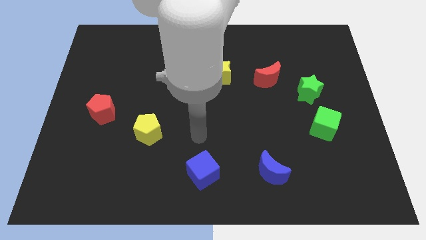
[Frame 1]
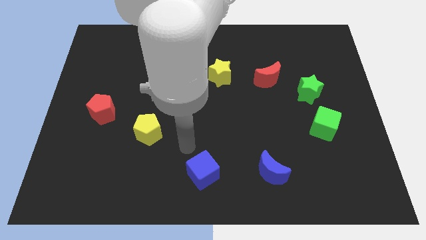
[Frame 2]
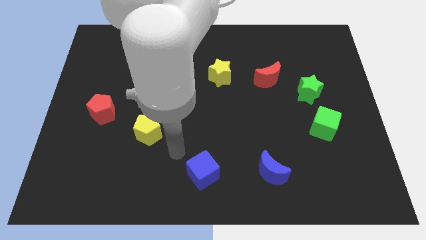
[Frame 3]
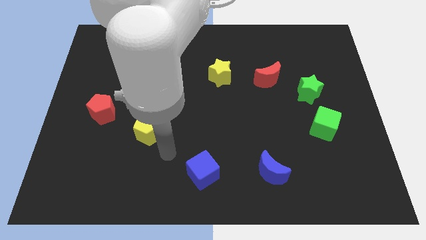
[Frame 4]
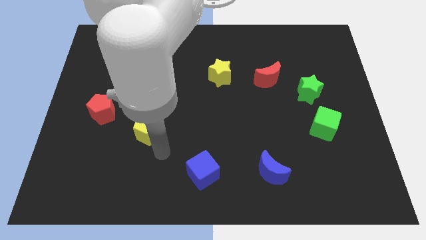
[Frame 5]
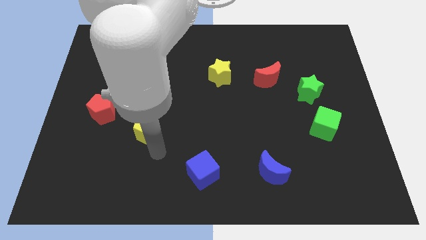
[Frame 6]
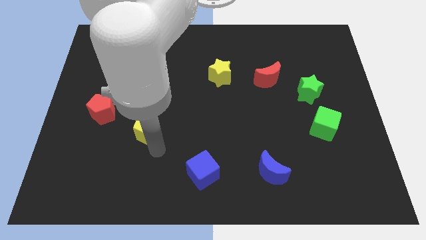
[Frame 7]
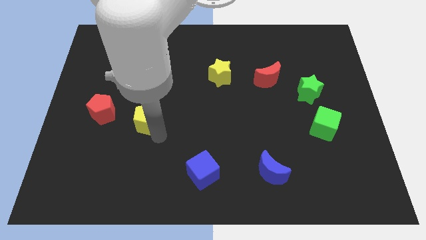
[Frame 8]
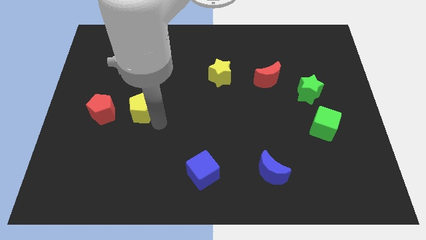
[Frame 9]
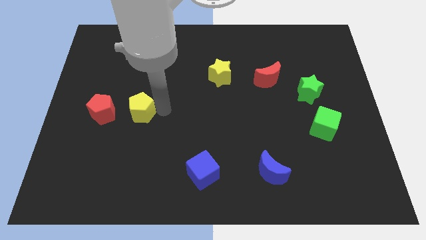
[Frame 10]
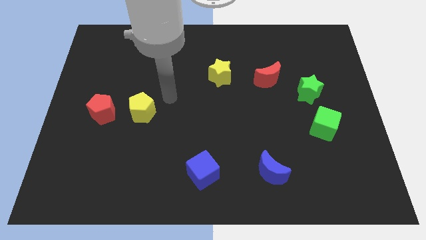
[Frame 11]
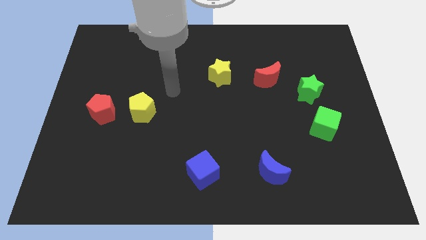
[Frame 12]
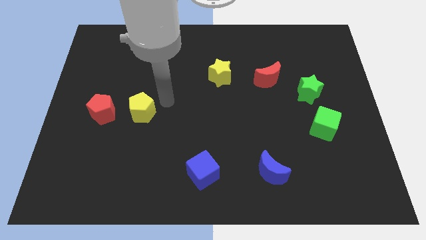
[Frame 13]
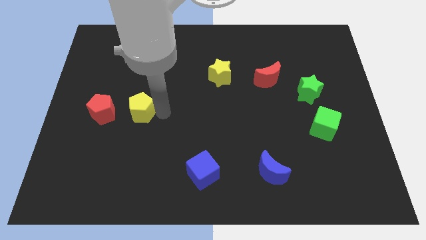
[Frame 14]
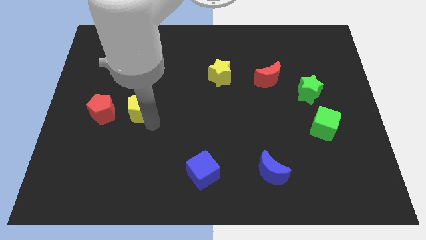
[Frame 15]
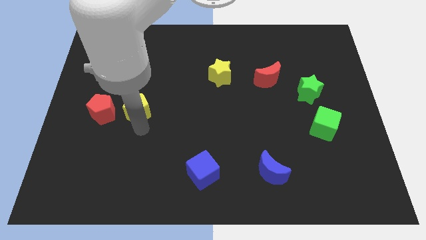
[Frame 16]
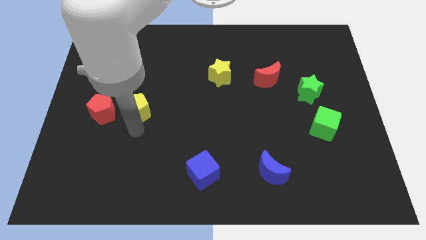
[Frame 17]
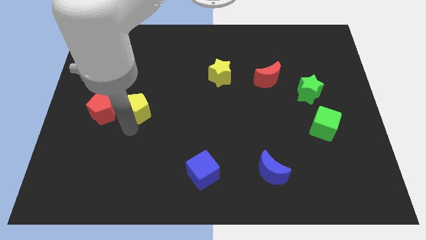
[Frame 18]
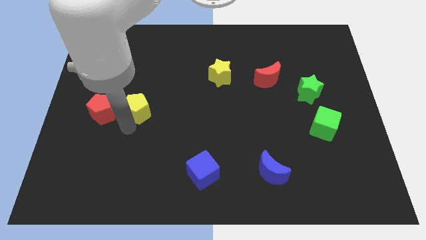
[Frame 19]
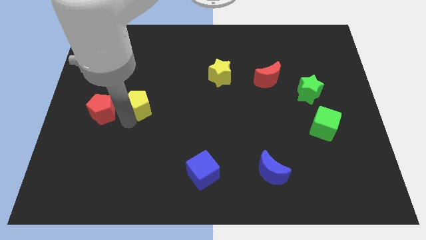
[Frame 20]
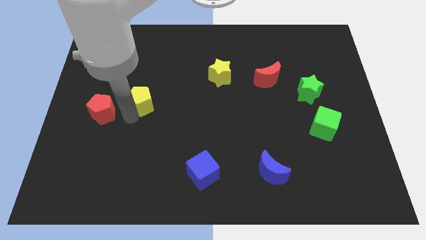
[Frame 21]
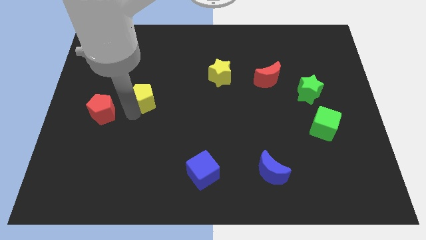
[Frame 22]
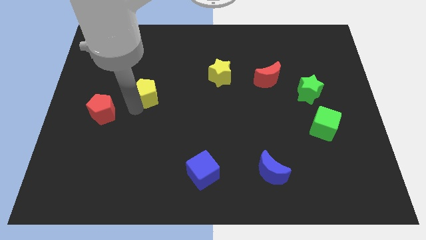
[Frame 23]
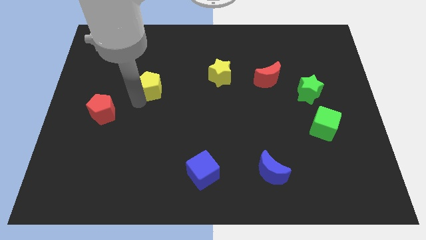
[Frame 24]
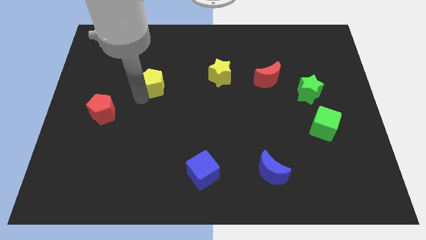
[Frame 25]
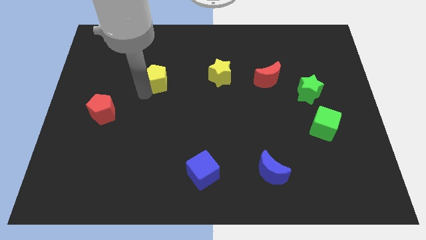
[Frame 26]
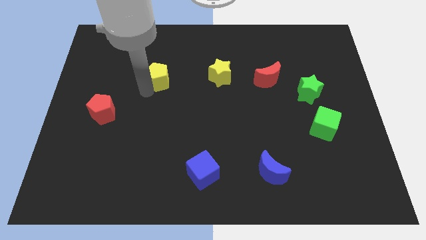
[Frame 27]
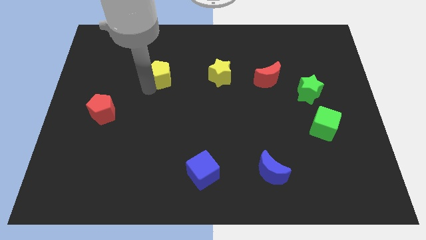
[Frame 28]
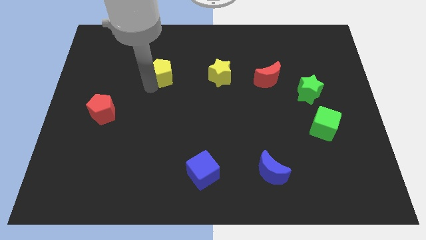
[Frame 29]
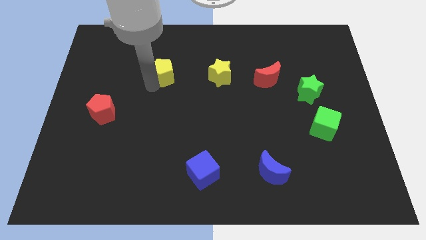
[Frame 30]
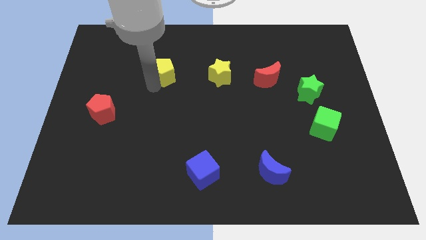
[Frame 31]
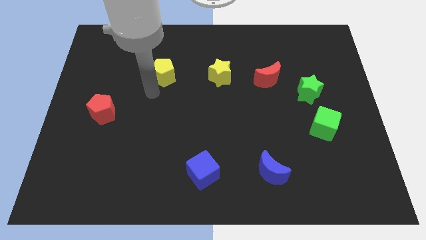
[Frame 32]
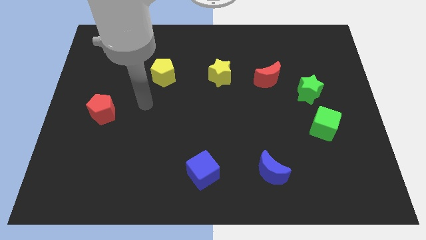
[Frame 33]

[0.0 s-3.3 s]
place the yellow pentagon on the left side of

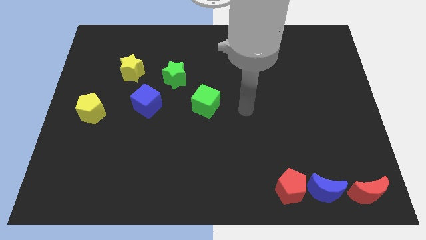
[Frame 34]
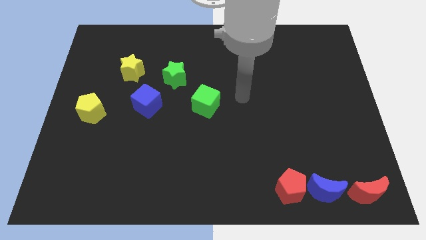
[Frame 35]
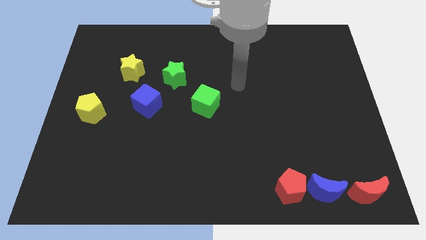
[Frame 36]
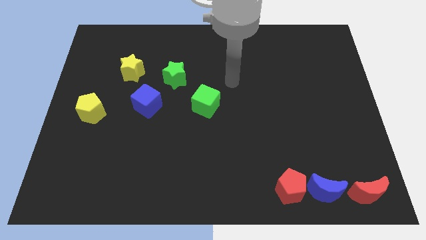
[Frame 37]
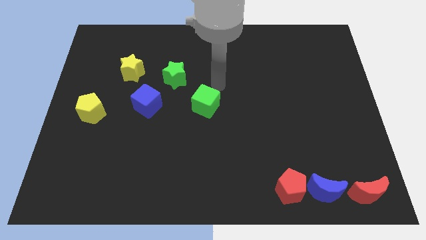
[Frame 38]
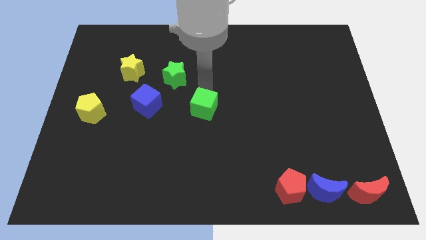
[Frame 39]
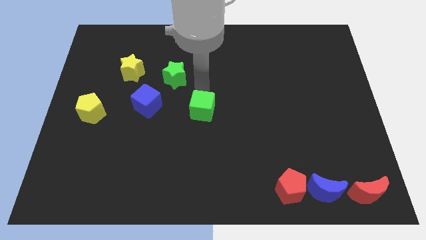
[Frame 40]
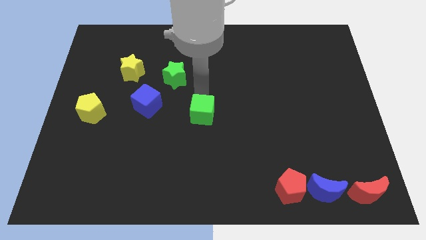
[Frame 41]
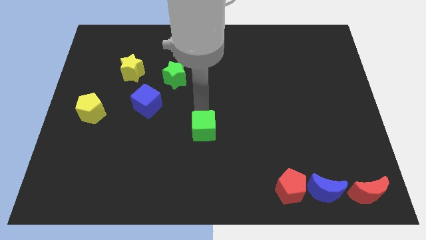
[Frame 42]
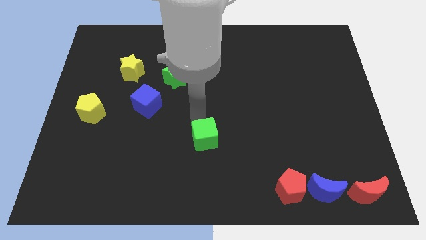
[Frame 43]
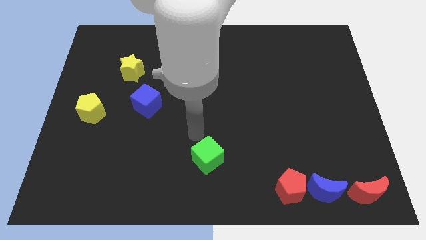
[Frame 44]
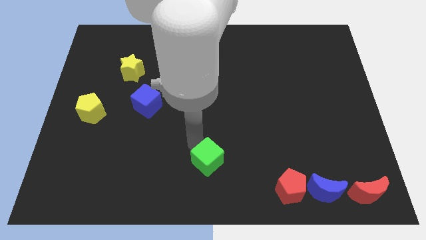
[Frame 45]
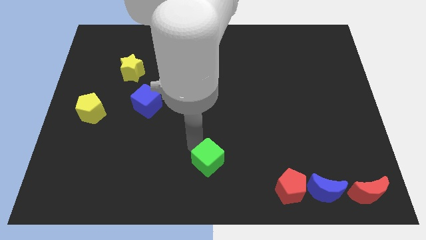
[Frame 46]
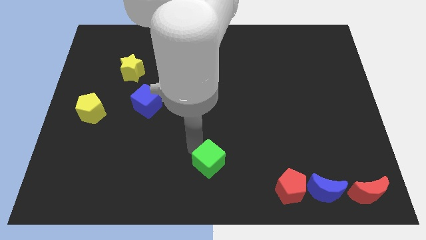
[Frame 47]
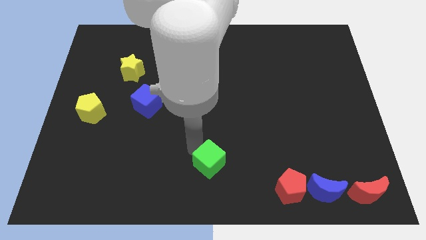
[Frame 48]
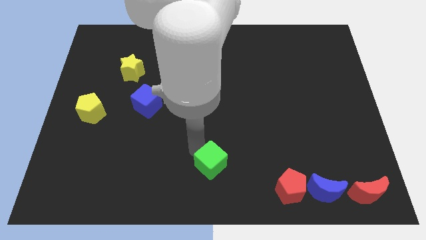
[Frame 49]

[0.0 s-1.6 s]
move the green cube towards the bottom

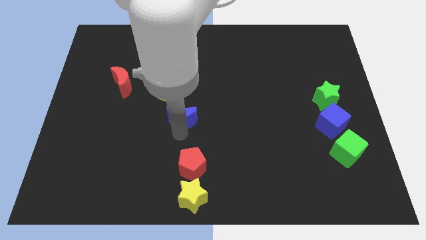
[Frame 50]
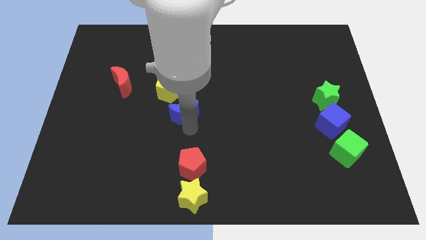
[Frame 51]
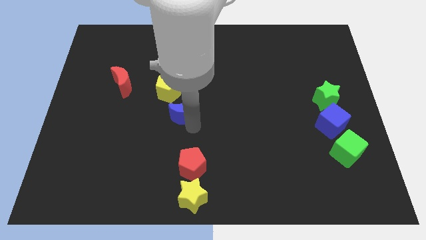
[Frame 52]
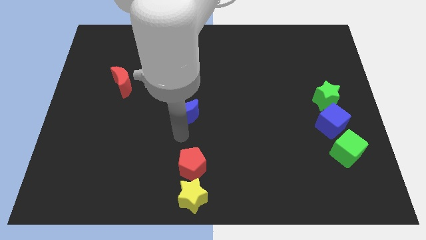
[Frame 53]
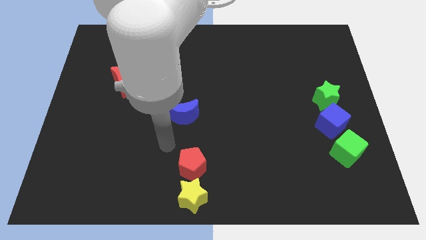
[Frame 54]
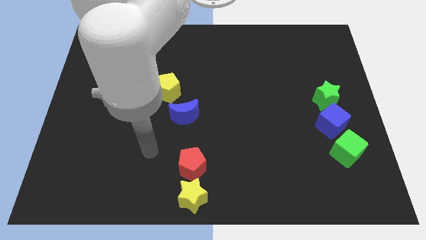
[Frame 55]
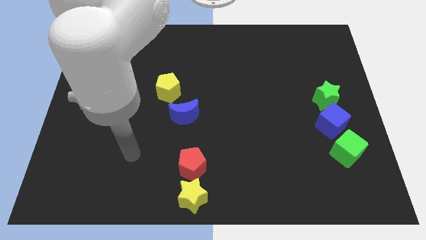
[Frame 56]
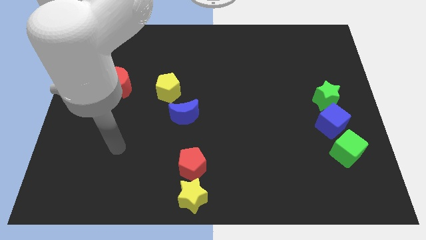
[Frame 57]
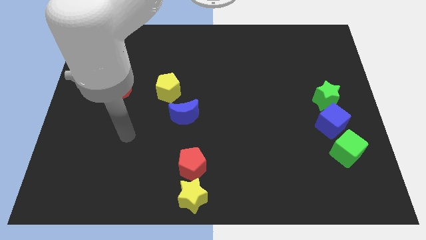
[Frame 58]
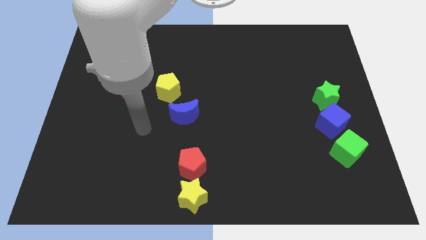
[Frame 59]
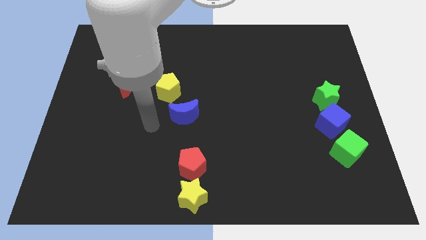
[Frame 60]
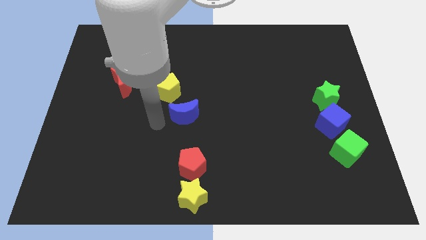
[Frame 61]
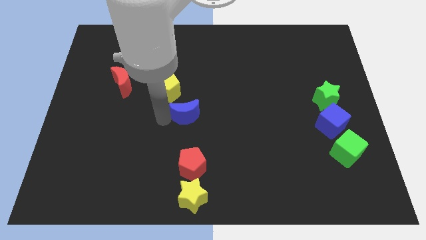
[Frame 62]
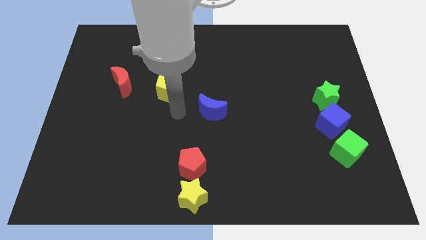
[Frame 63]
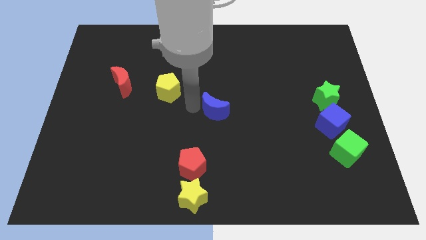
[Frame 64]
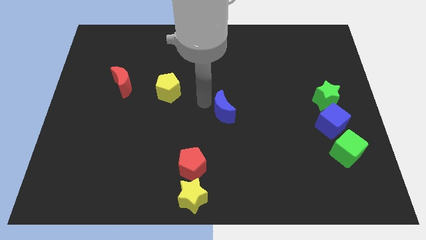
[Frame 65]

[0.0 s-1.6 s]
move the blue crescent to the center of the board

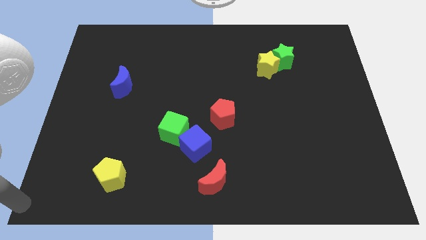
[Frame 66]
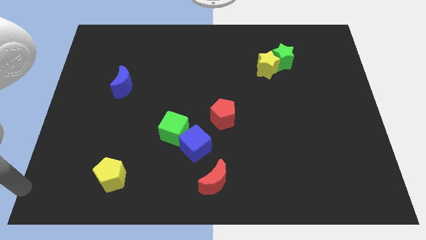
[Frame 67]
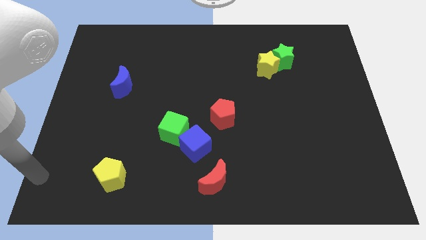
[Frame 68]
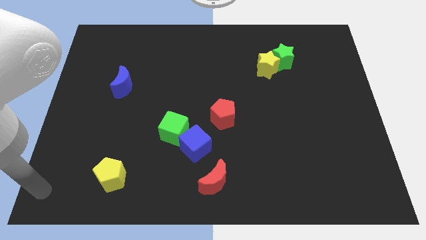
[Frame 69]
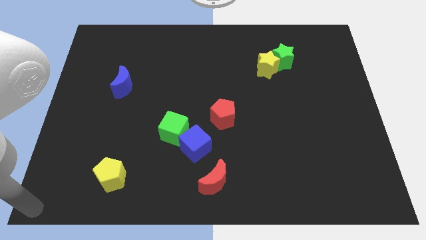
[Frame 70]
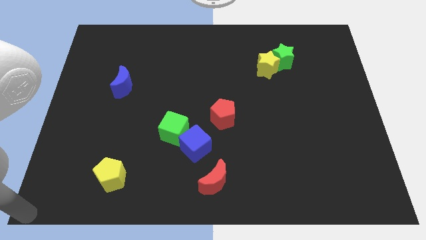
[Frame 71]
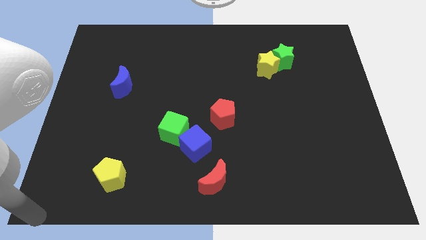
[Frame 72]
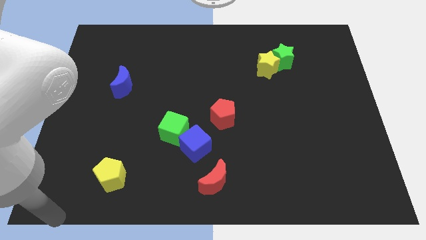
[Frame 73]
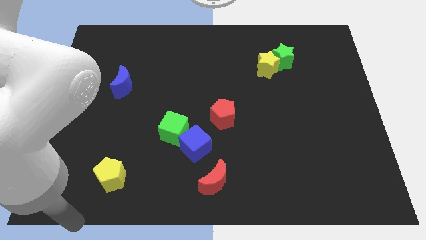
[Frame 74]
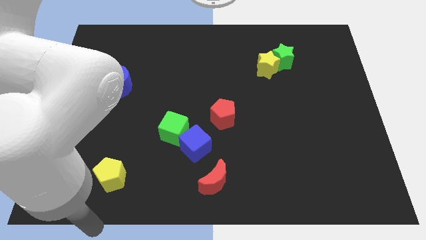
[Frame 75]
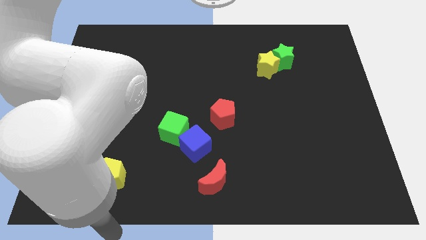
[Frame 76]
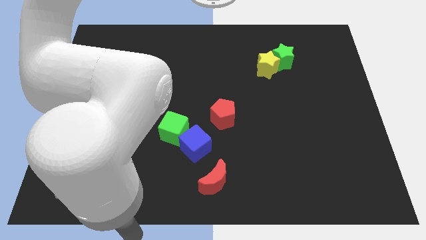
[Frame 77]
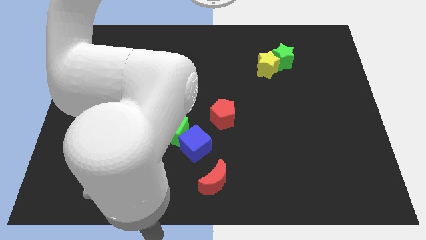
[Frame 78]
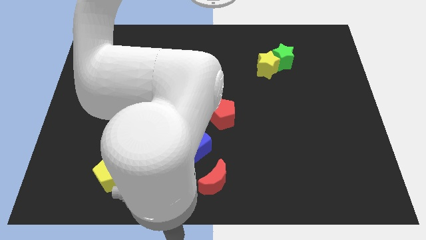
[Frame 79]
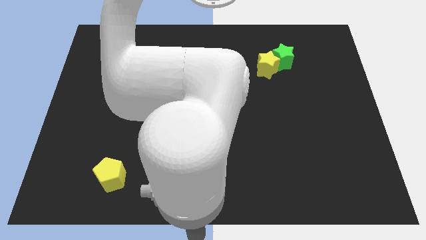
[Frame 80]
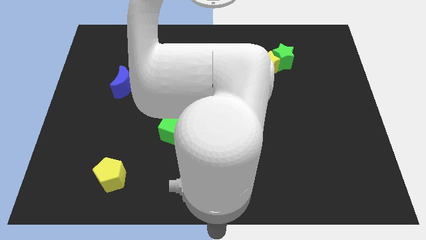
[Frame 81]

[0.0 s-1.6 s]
move your hand to the bottom center

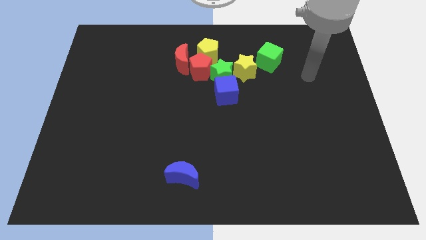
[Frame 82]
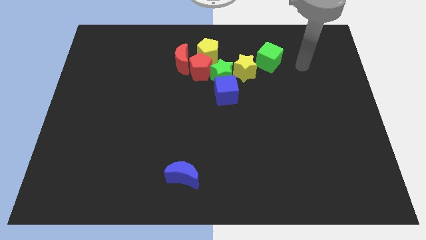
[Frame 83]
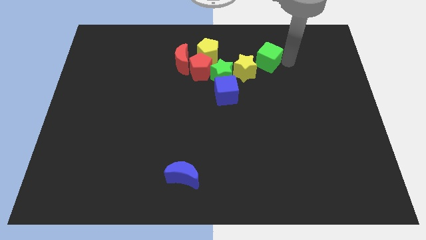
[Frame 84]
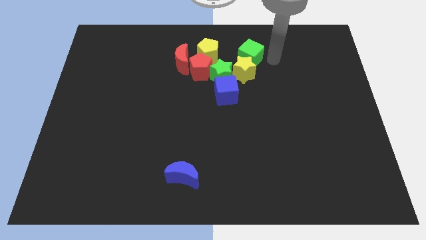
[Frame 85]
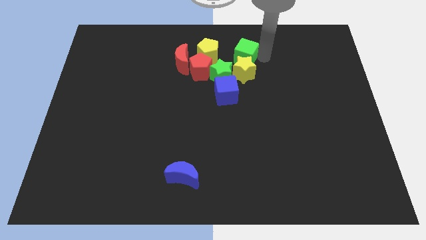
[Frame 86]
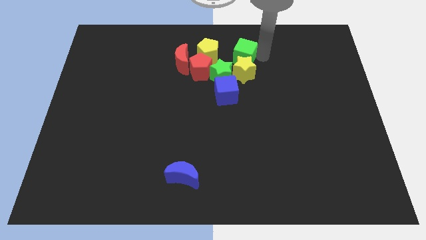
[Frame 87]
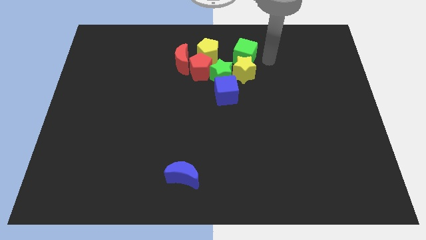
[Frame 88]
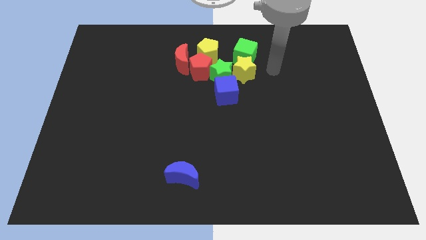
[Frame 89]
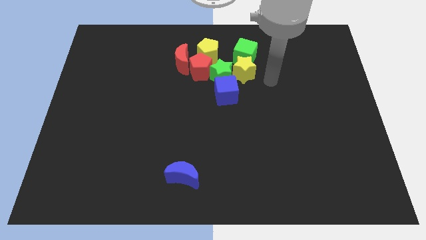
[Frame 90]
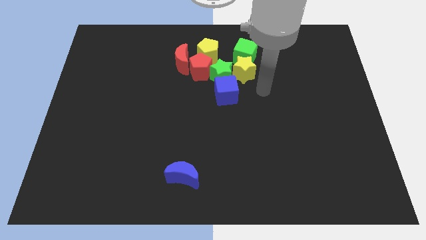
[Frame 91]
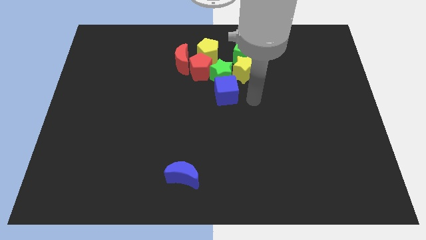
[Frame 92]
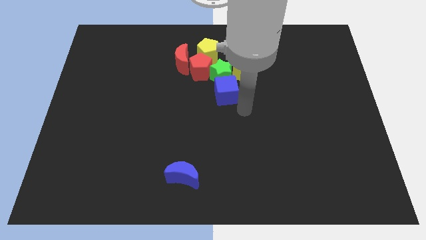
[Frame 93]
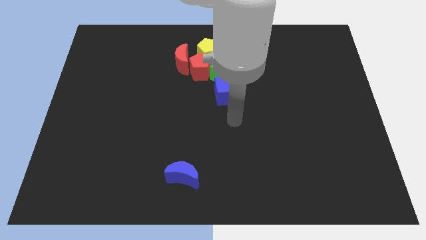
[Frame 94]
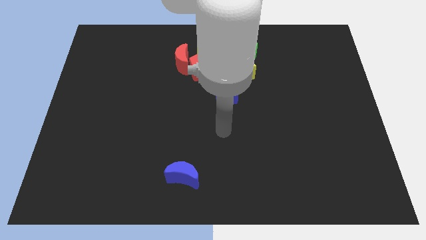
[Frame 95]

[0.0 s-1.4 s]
move the green cube into the yellow star
